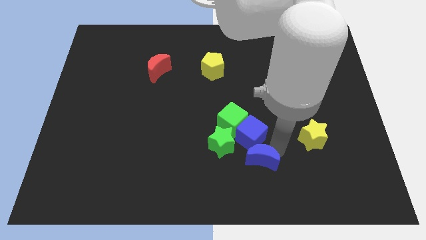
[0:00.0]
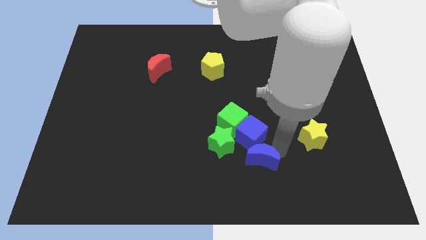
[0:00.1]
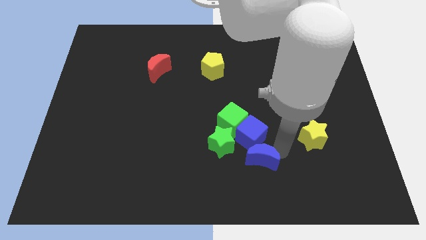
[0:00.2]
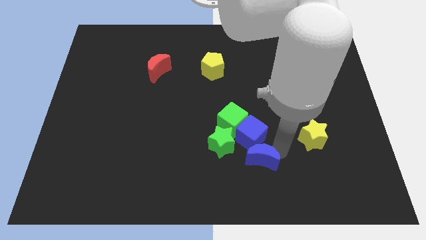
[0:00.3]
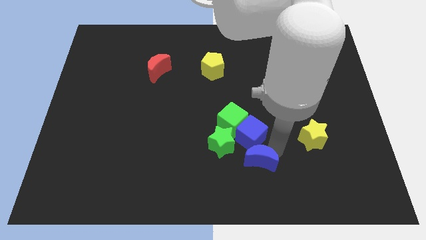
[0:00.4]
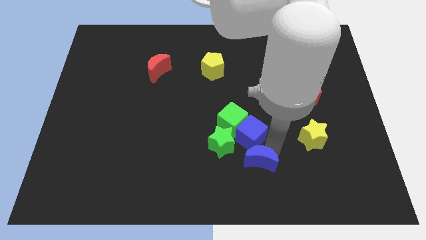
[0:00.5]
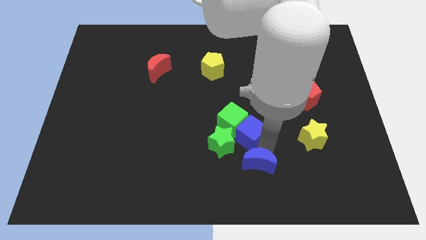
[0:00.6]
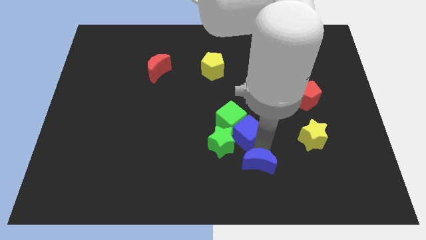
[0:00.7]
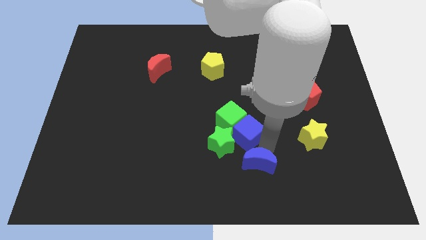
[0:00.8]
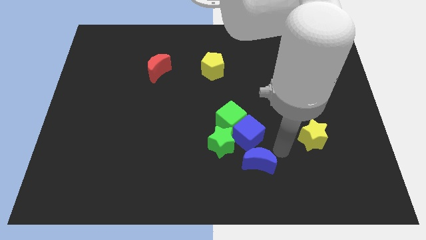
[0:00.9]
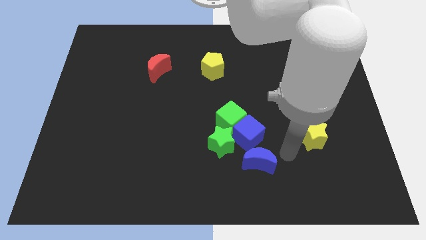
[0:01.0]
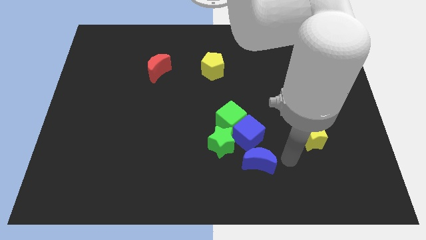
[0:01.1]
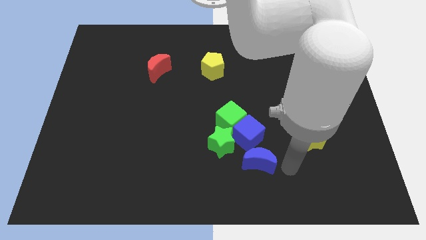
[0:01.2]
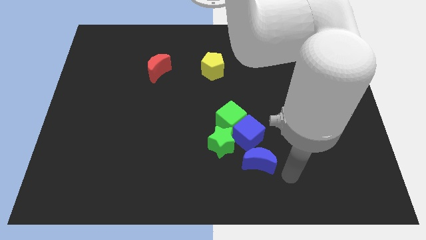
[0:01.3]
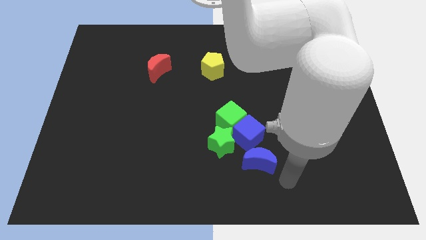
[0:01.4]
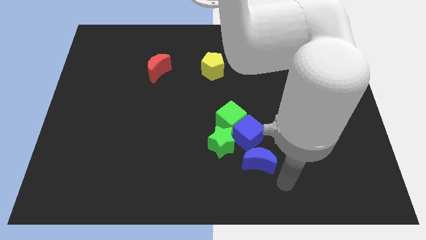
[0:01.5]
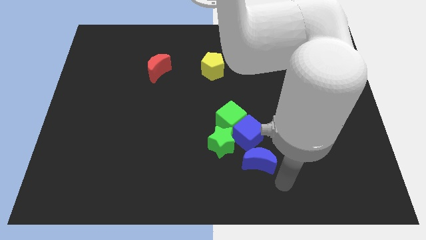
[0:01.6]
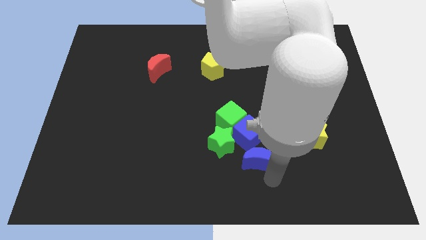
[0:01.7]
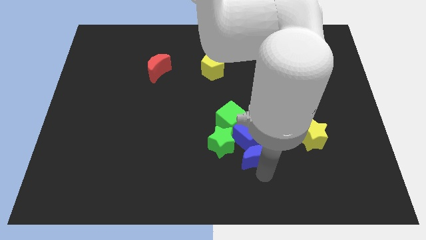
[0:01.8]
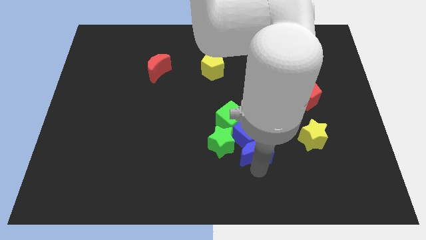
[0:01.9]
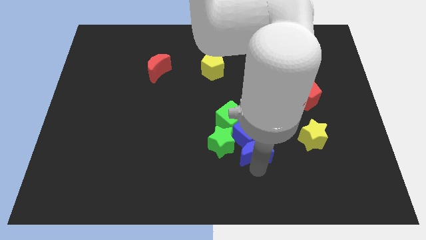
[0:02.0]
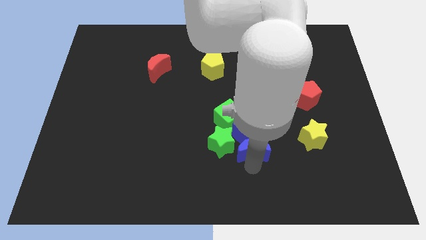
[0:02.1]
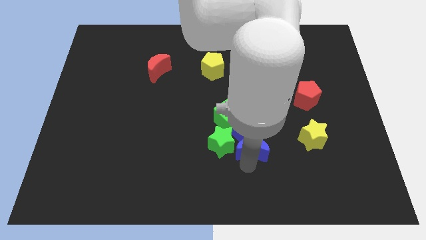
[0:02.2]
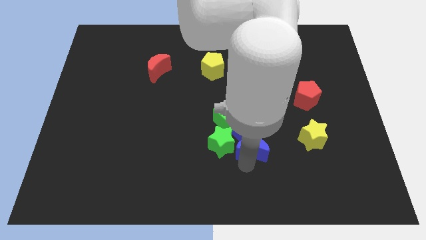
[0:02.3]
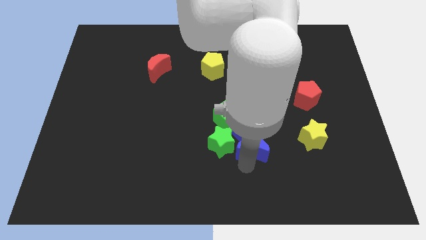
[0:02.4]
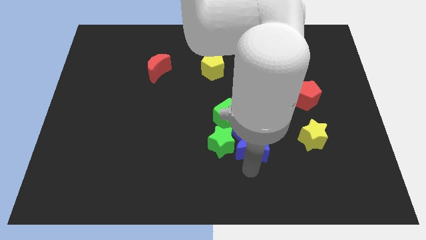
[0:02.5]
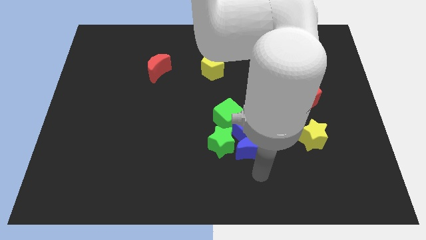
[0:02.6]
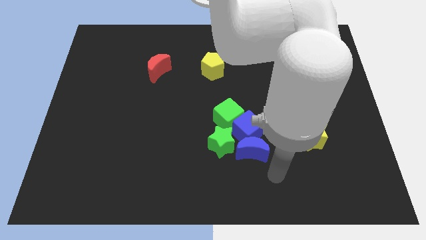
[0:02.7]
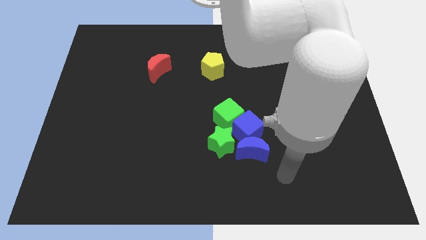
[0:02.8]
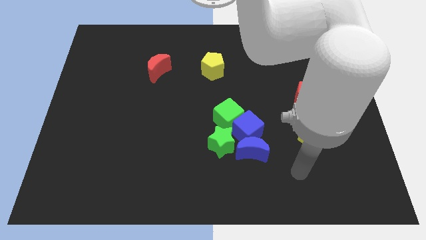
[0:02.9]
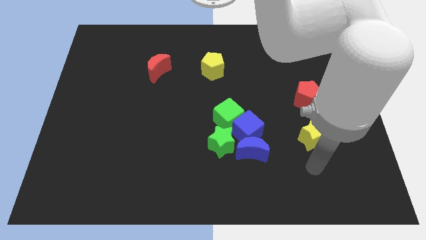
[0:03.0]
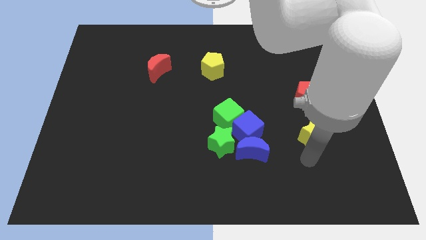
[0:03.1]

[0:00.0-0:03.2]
push the blue cubes into green cubes

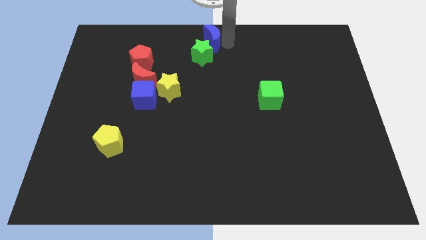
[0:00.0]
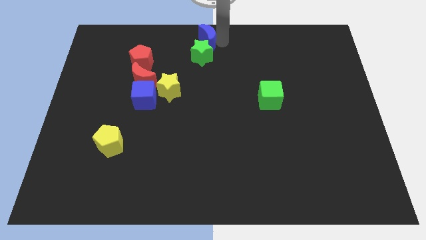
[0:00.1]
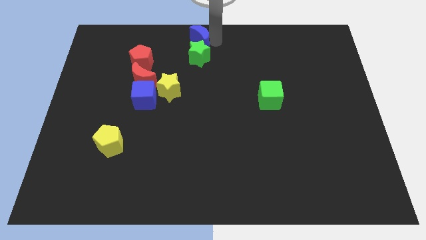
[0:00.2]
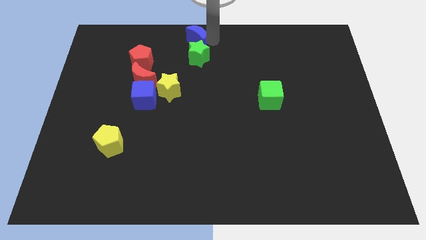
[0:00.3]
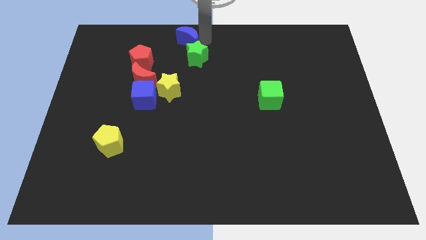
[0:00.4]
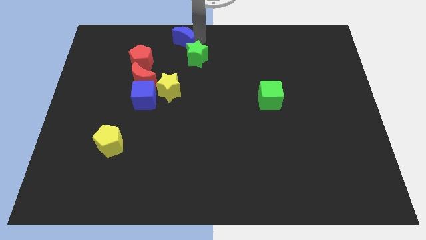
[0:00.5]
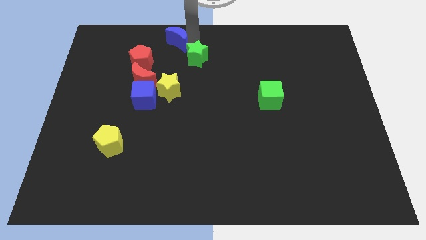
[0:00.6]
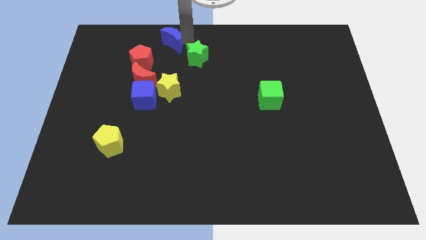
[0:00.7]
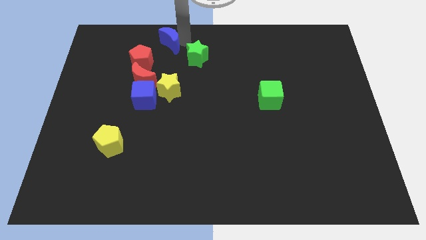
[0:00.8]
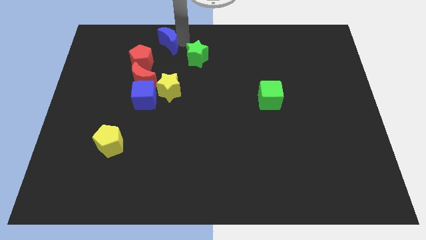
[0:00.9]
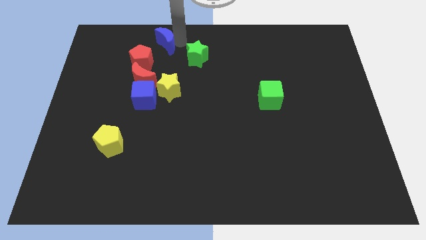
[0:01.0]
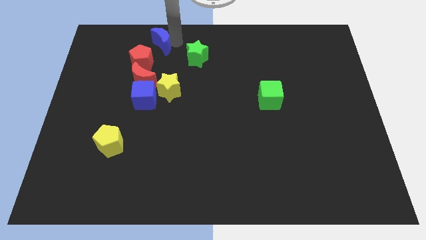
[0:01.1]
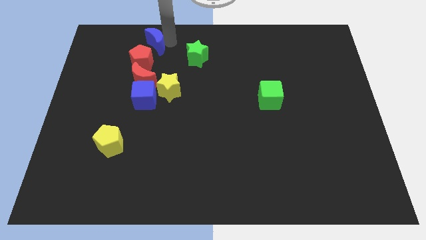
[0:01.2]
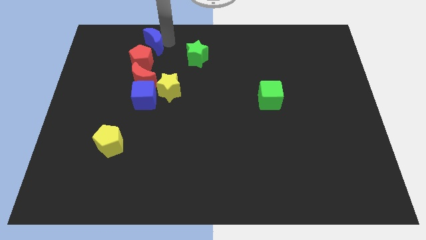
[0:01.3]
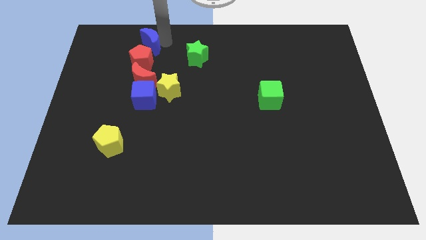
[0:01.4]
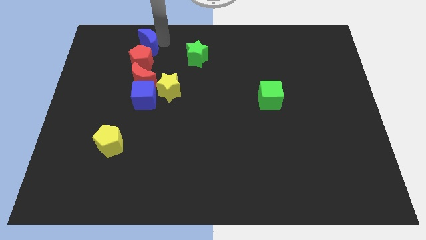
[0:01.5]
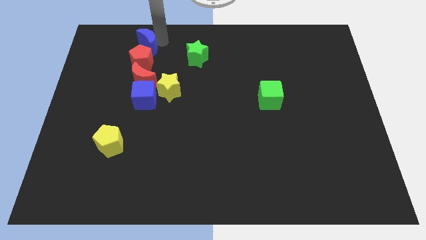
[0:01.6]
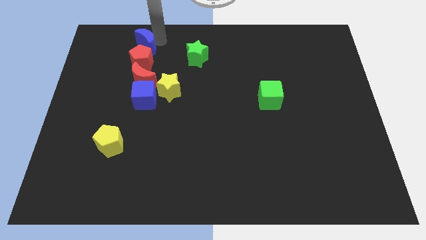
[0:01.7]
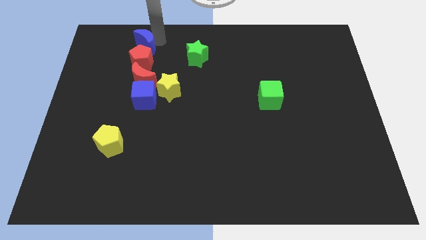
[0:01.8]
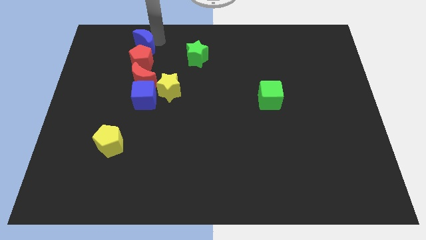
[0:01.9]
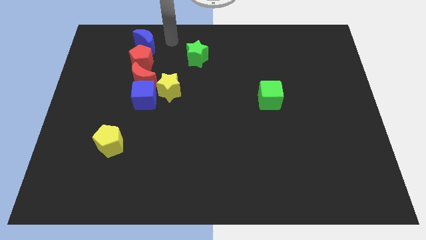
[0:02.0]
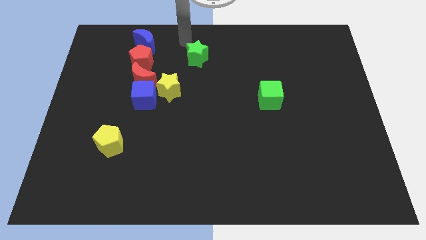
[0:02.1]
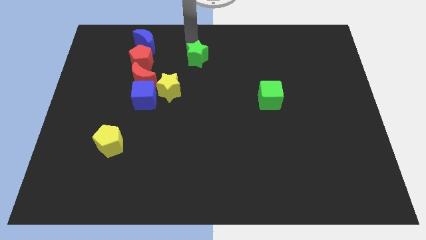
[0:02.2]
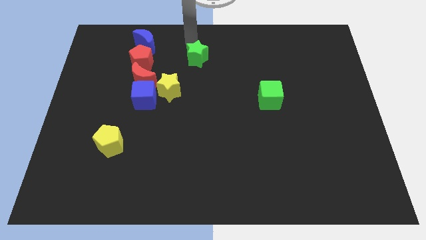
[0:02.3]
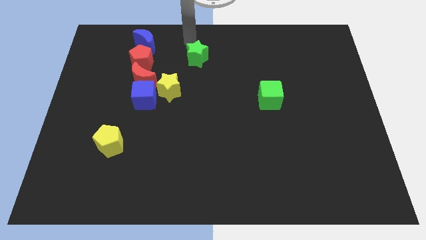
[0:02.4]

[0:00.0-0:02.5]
separate blue moon and green star

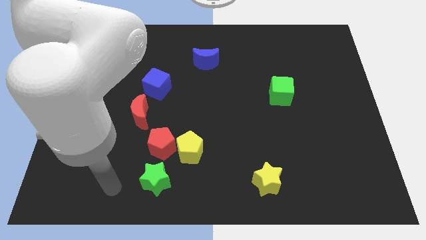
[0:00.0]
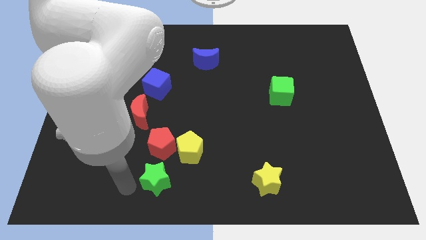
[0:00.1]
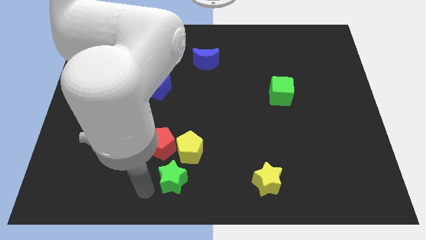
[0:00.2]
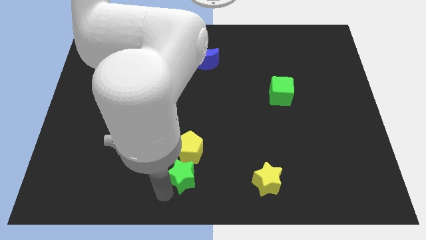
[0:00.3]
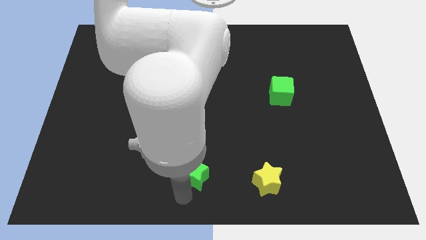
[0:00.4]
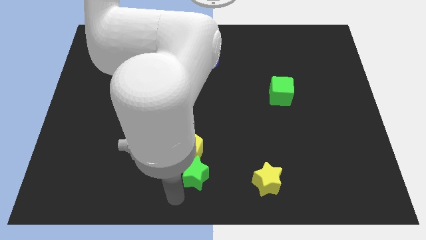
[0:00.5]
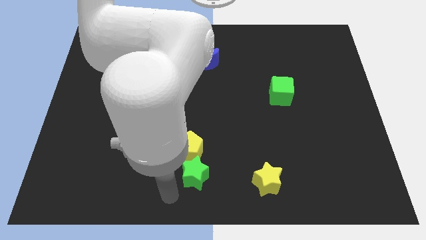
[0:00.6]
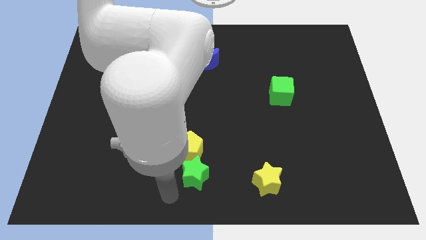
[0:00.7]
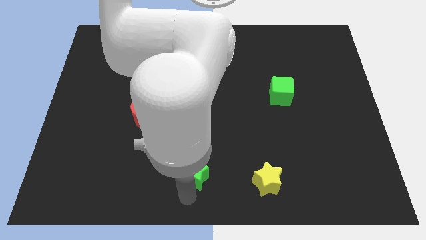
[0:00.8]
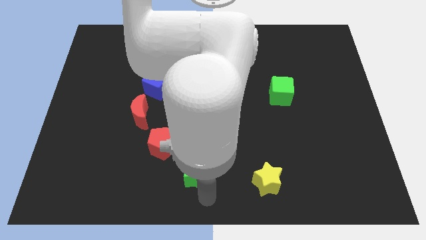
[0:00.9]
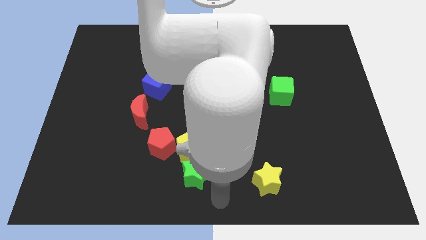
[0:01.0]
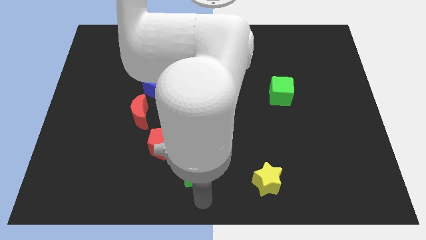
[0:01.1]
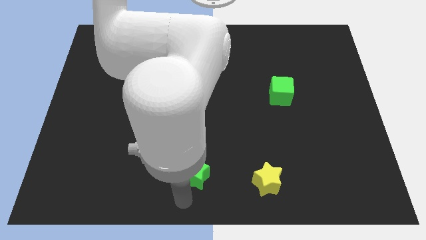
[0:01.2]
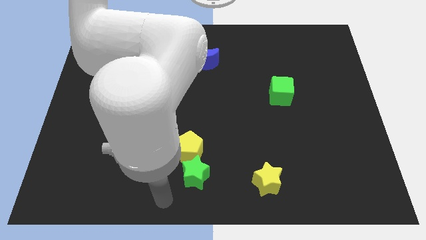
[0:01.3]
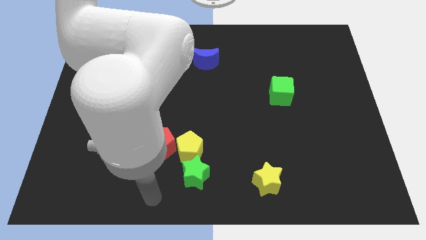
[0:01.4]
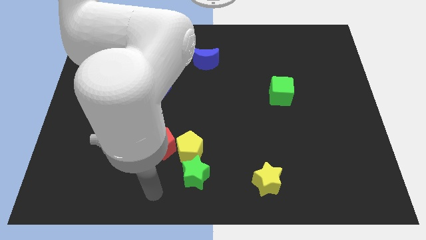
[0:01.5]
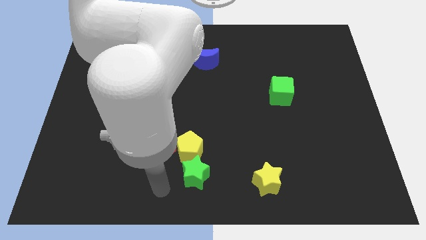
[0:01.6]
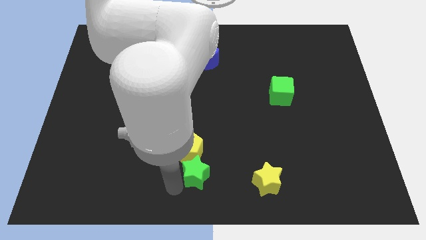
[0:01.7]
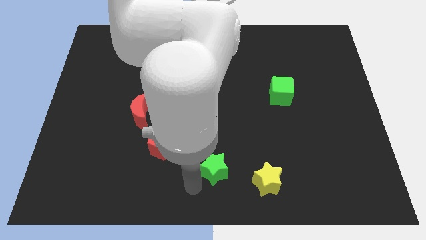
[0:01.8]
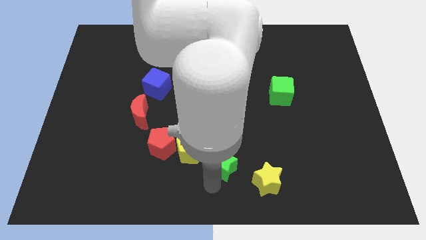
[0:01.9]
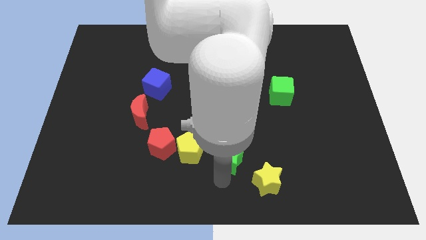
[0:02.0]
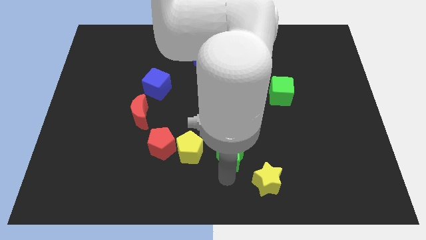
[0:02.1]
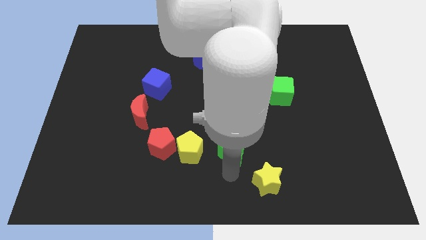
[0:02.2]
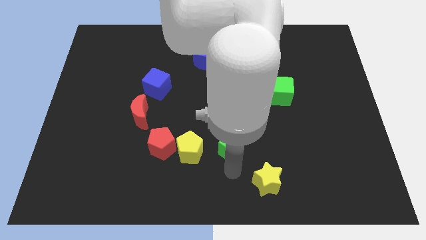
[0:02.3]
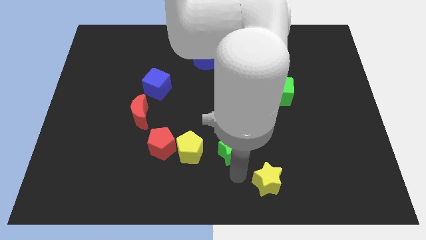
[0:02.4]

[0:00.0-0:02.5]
move the green star right beside the yellow pentagon

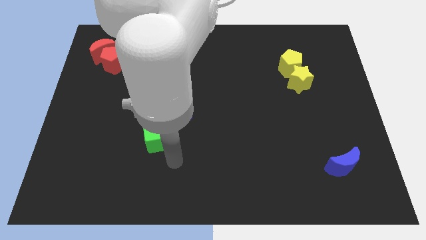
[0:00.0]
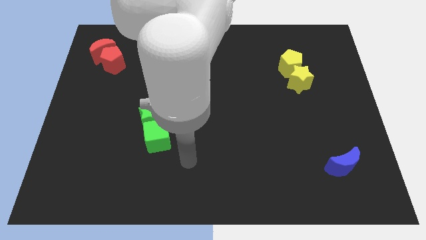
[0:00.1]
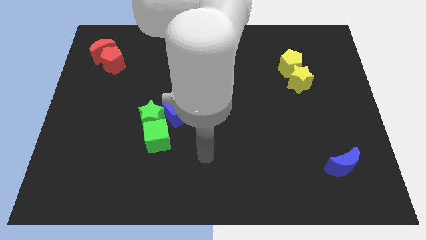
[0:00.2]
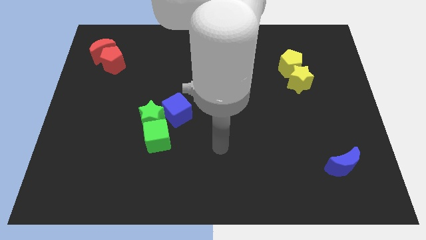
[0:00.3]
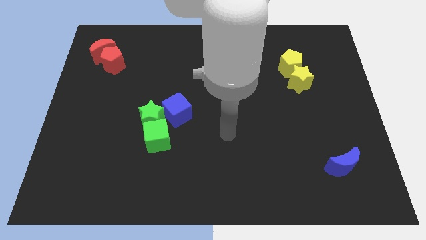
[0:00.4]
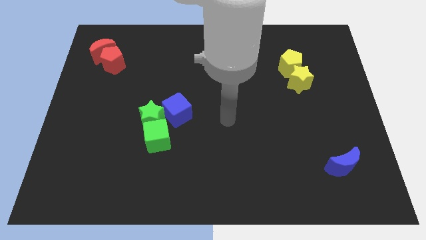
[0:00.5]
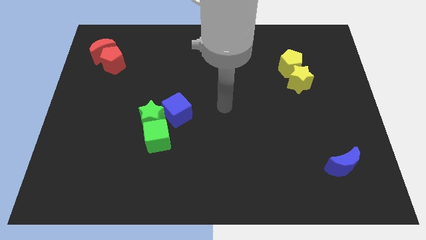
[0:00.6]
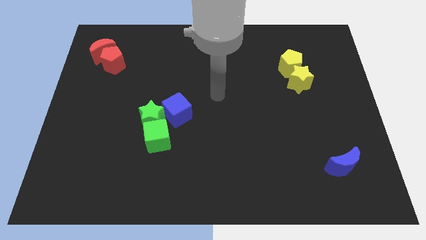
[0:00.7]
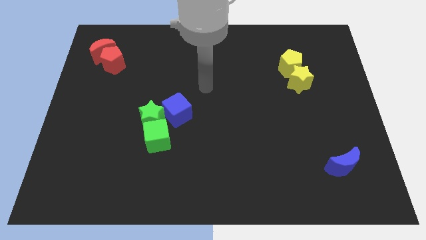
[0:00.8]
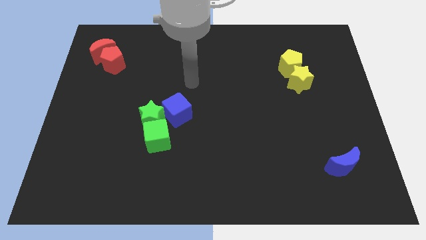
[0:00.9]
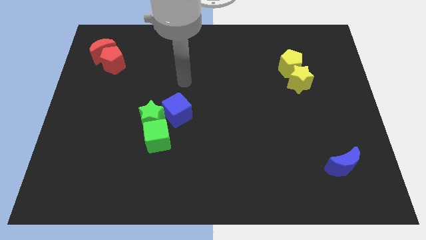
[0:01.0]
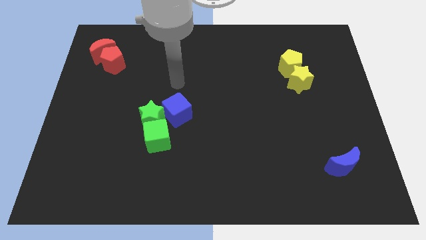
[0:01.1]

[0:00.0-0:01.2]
place your arm above the blue cube
